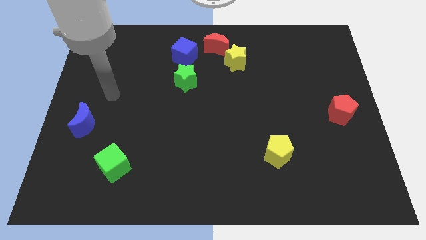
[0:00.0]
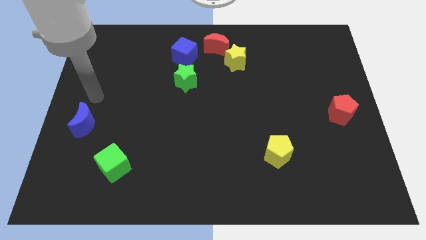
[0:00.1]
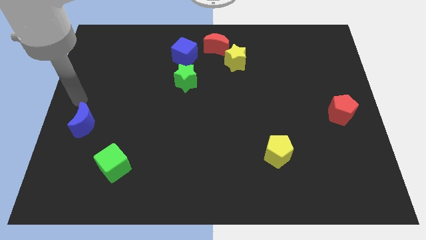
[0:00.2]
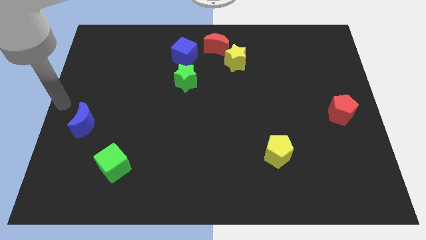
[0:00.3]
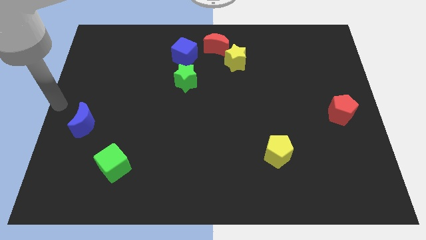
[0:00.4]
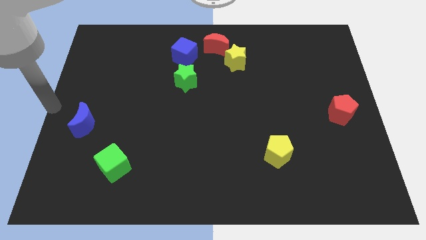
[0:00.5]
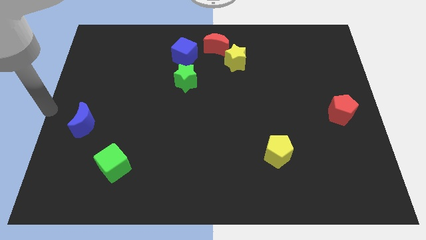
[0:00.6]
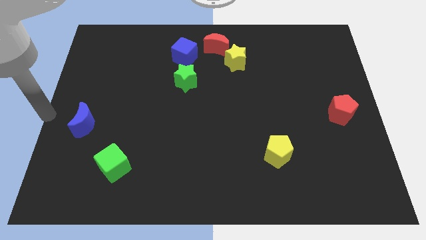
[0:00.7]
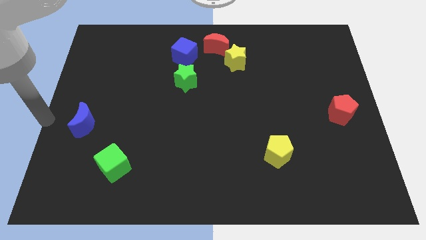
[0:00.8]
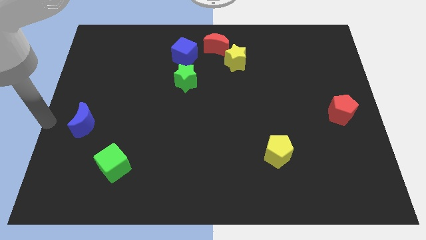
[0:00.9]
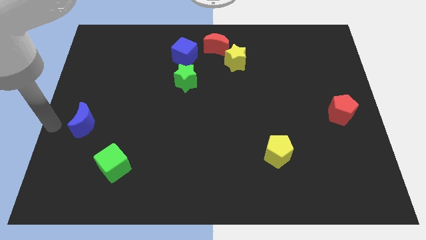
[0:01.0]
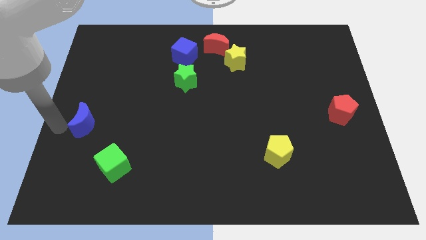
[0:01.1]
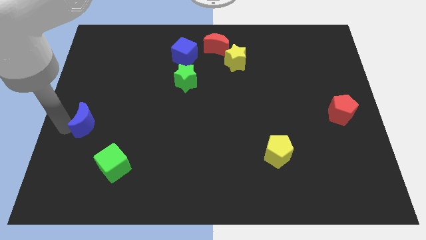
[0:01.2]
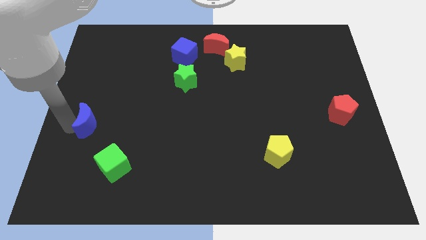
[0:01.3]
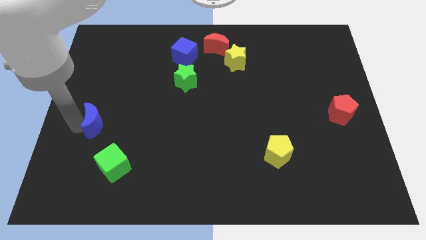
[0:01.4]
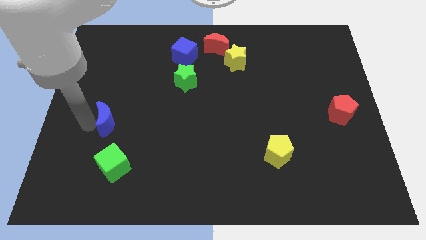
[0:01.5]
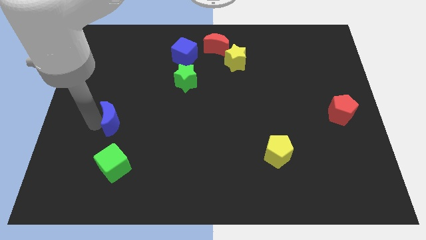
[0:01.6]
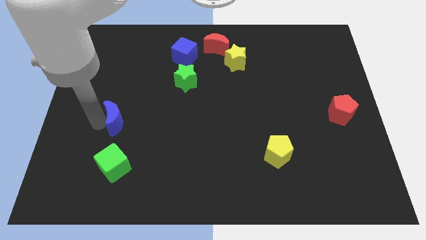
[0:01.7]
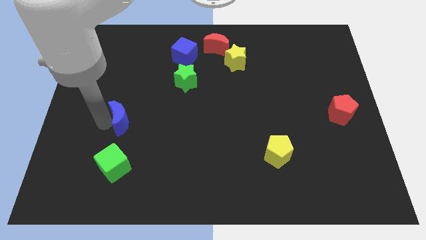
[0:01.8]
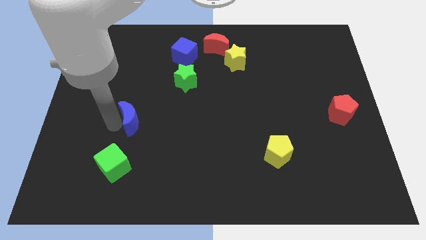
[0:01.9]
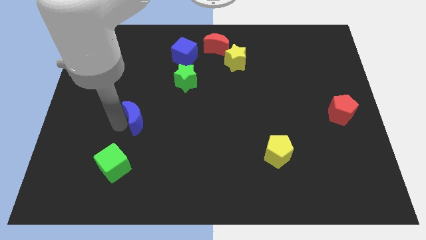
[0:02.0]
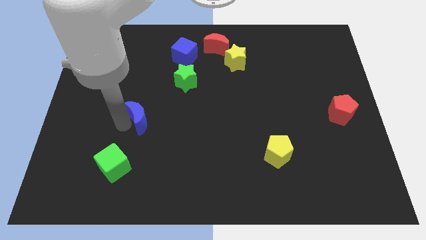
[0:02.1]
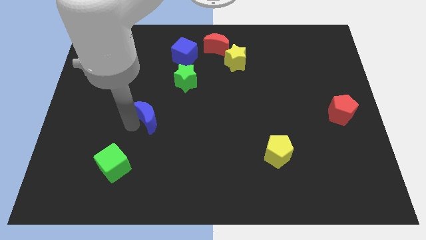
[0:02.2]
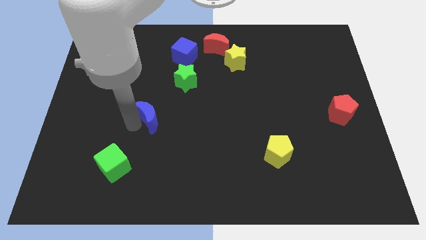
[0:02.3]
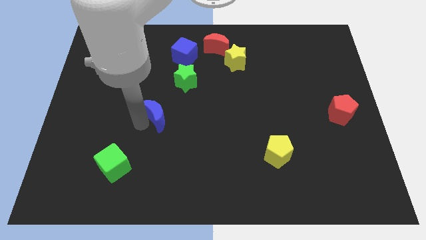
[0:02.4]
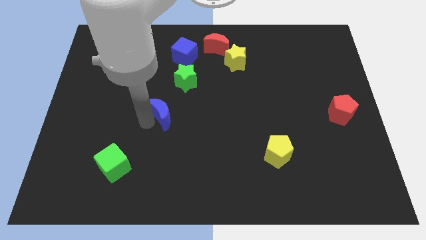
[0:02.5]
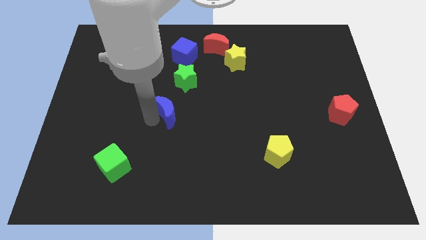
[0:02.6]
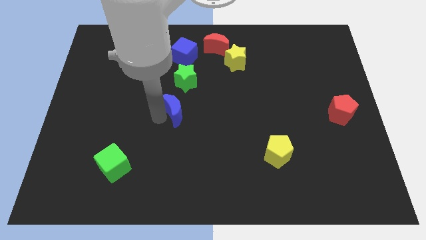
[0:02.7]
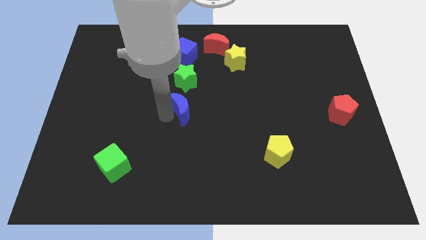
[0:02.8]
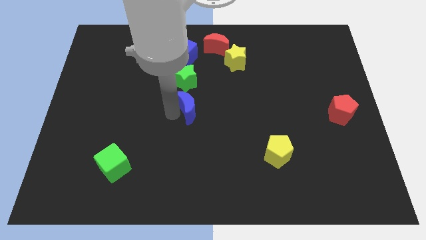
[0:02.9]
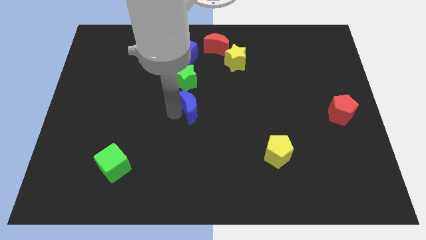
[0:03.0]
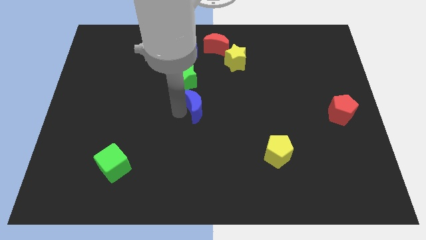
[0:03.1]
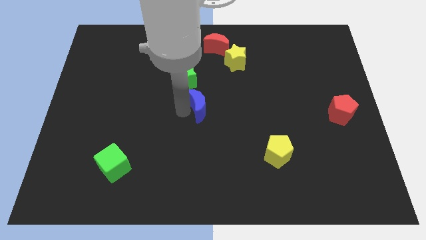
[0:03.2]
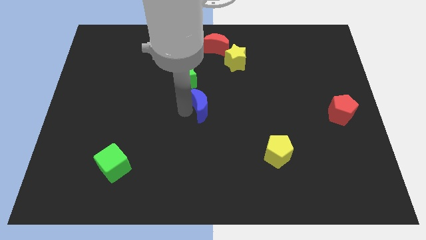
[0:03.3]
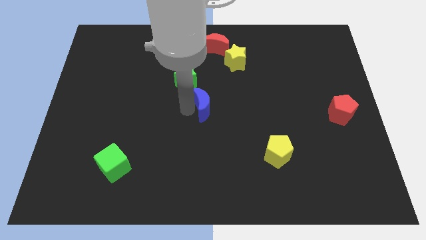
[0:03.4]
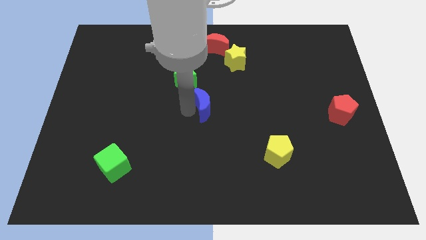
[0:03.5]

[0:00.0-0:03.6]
push blue crescent towards the center

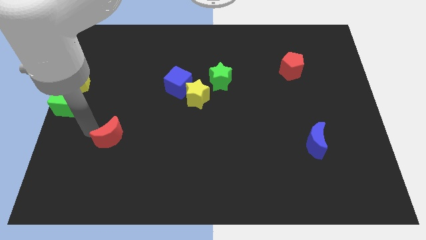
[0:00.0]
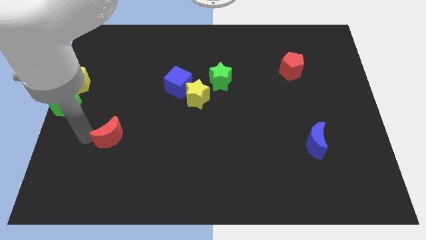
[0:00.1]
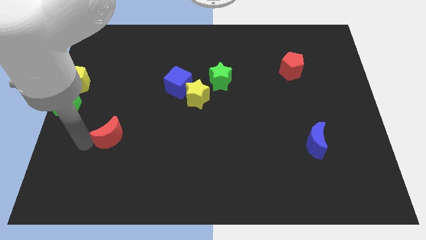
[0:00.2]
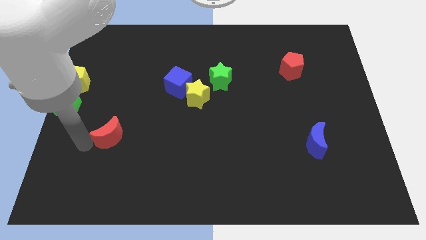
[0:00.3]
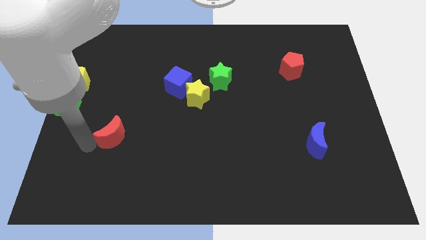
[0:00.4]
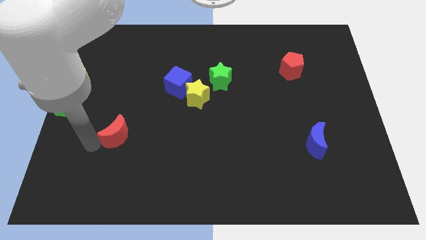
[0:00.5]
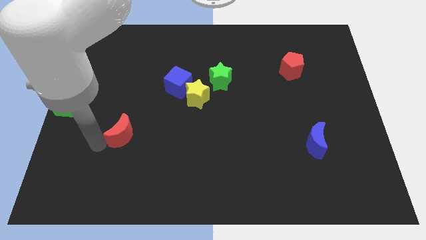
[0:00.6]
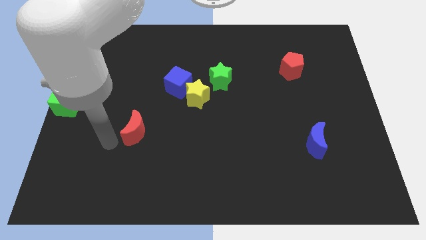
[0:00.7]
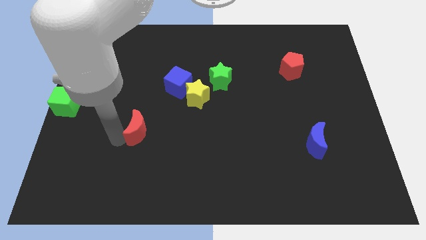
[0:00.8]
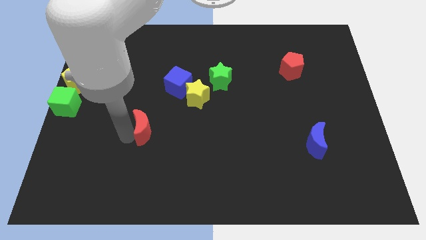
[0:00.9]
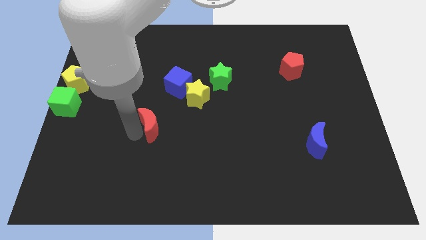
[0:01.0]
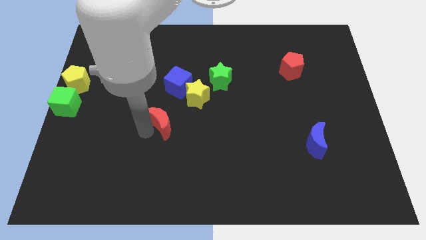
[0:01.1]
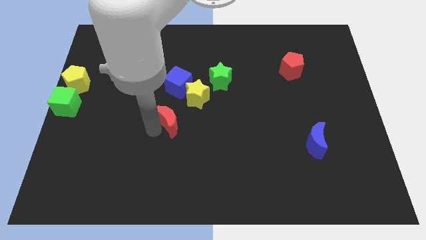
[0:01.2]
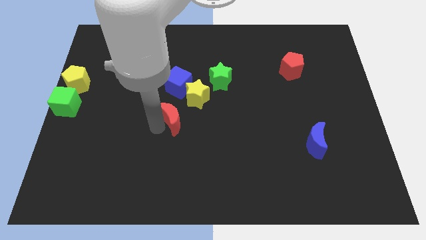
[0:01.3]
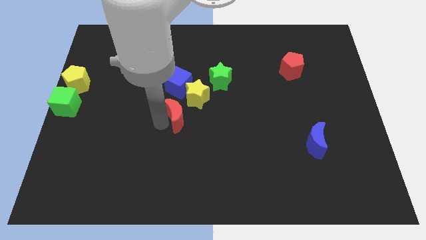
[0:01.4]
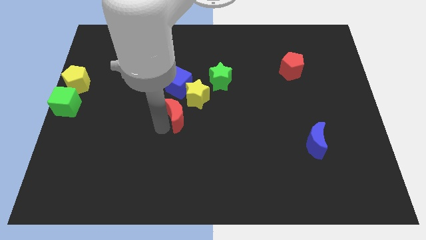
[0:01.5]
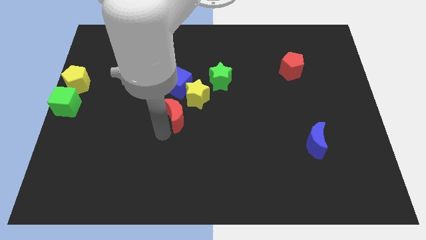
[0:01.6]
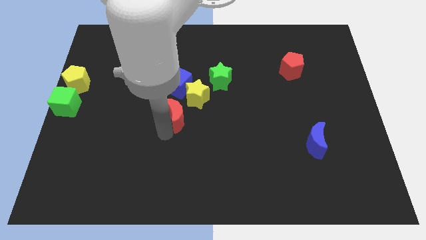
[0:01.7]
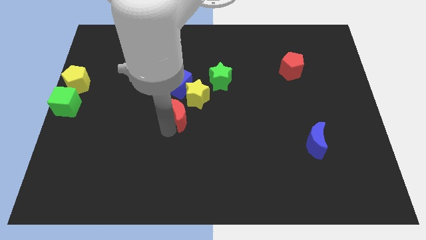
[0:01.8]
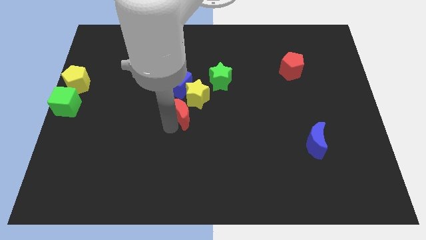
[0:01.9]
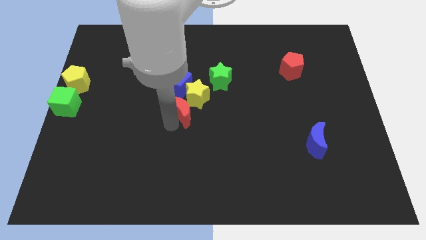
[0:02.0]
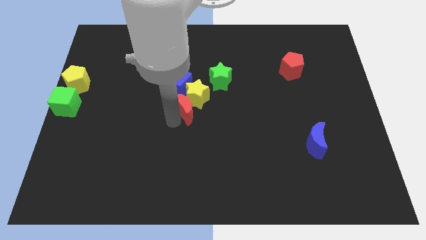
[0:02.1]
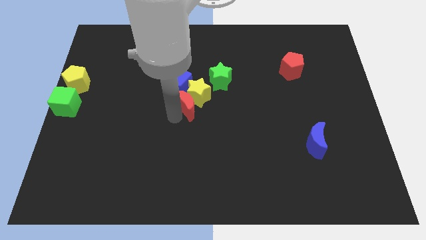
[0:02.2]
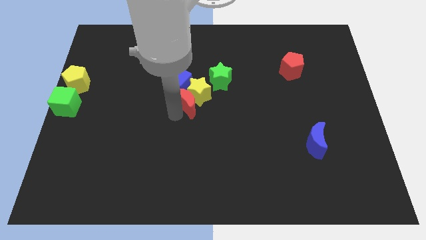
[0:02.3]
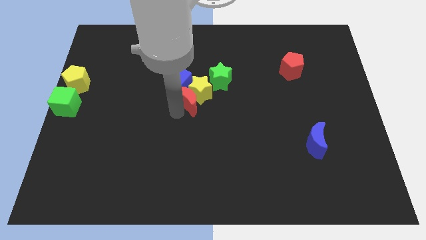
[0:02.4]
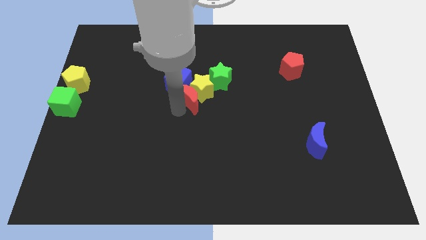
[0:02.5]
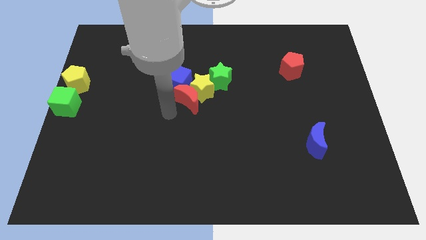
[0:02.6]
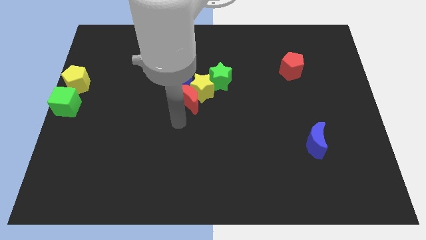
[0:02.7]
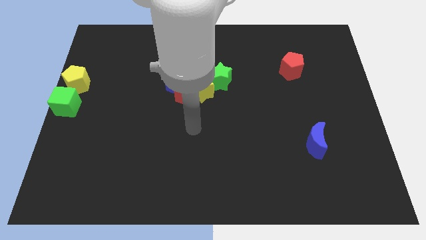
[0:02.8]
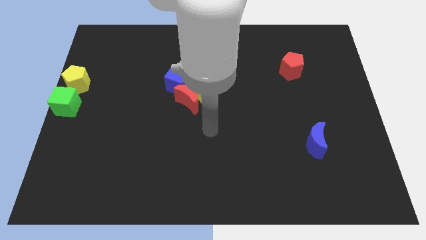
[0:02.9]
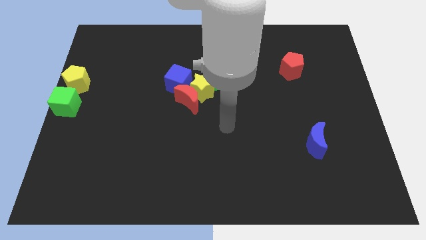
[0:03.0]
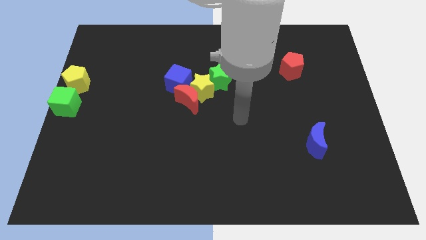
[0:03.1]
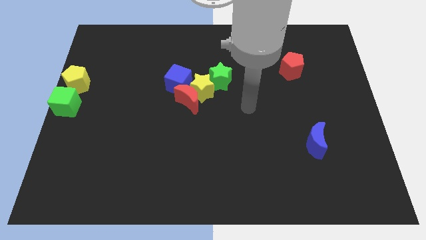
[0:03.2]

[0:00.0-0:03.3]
place the red moon close to yellow star

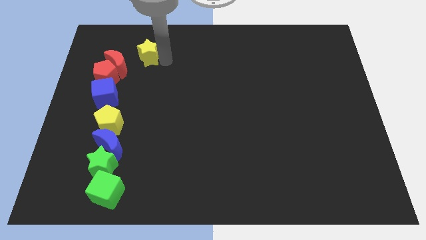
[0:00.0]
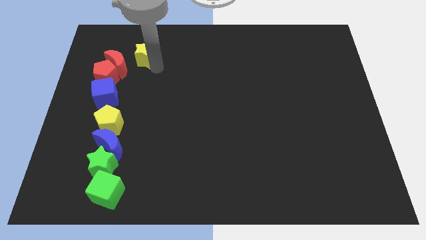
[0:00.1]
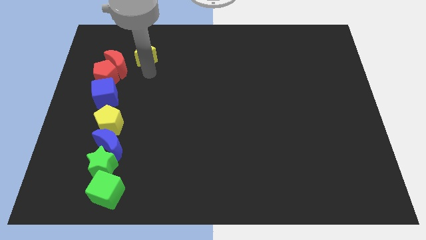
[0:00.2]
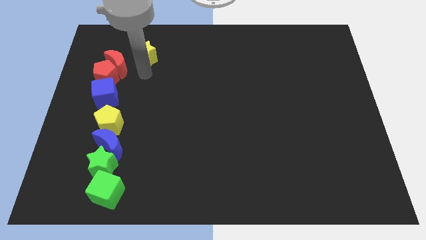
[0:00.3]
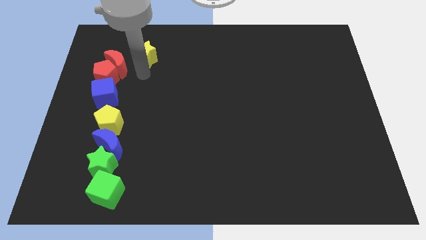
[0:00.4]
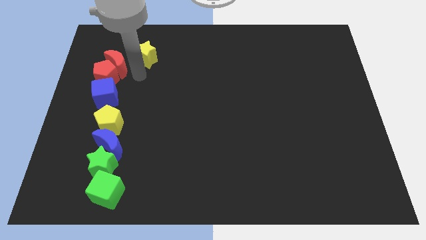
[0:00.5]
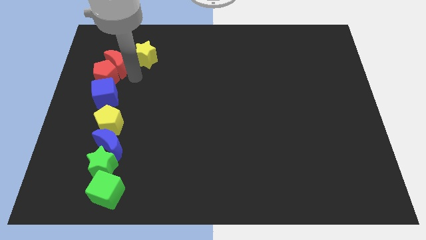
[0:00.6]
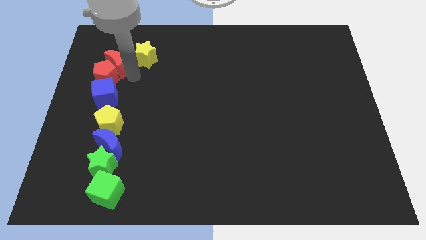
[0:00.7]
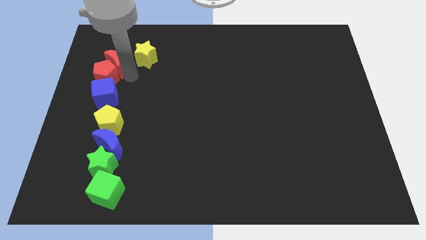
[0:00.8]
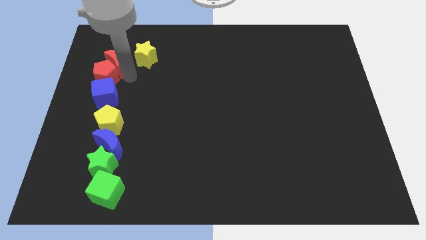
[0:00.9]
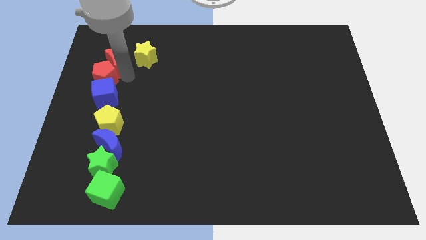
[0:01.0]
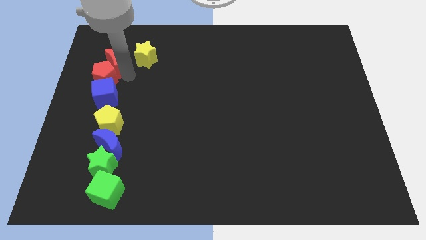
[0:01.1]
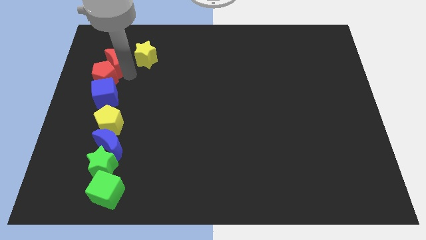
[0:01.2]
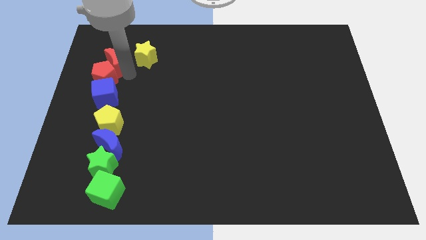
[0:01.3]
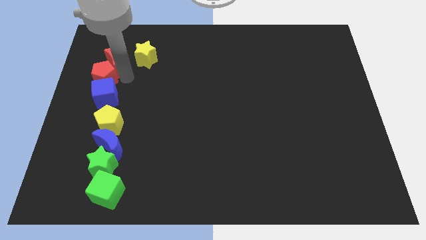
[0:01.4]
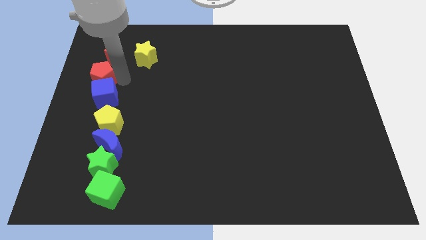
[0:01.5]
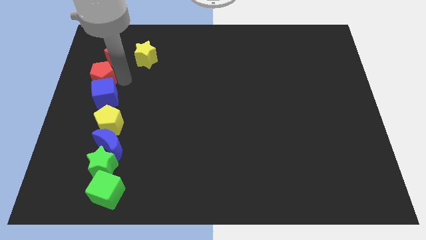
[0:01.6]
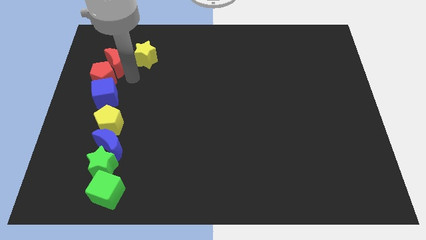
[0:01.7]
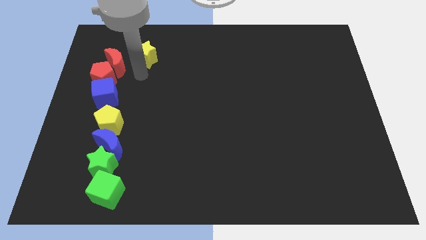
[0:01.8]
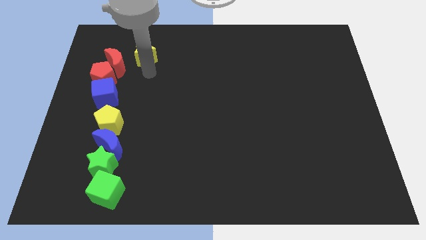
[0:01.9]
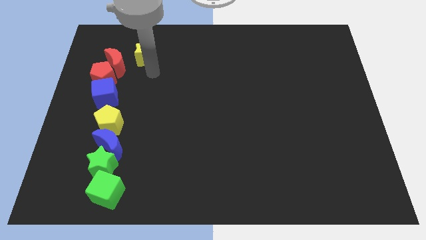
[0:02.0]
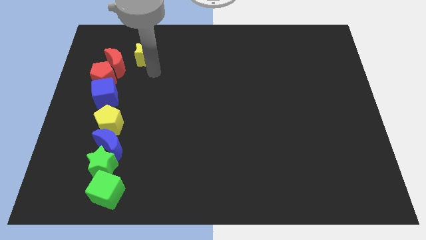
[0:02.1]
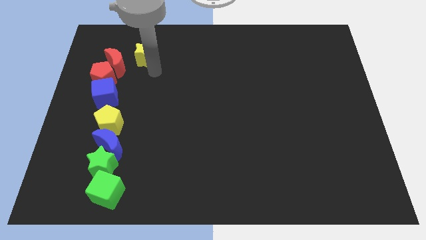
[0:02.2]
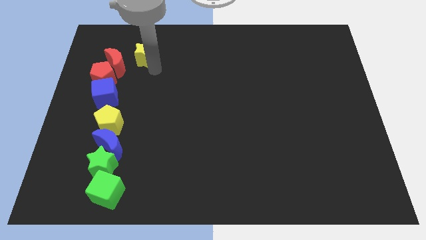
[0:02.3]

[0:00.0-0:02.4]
adjust the red pentagonred crescent slightly
